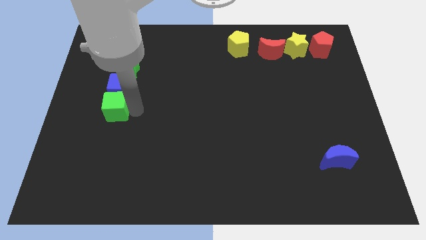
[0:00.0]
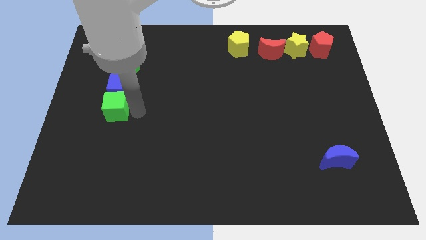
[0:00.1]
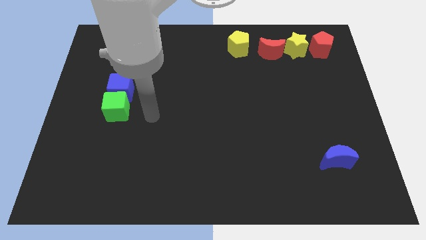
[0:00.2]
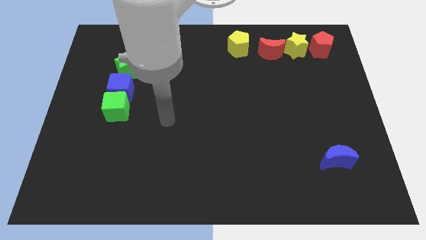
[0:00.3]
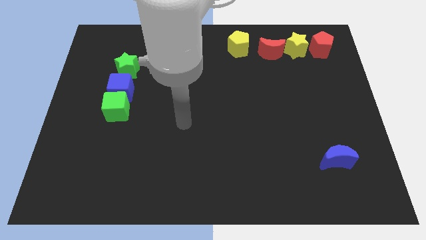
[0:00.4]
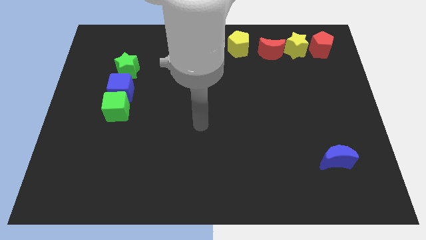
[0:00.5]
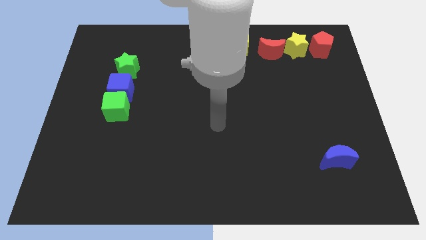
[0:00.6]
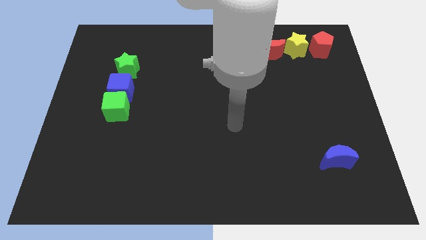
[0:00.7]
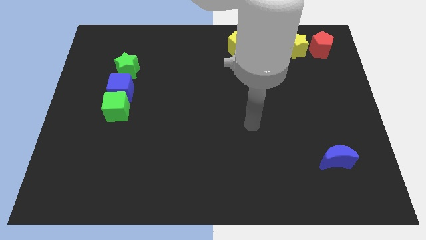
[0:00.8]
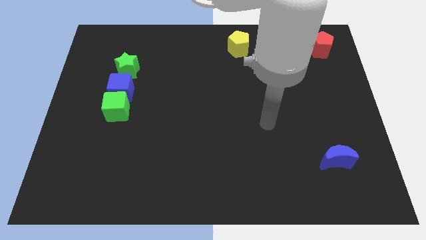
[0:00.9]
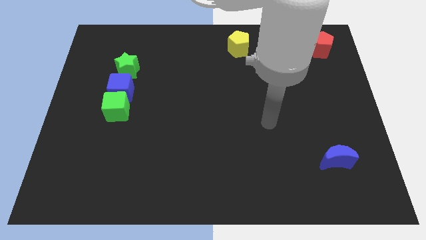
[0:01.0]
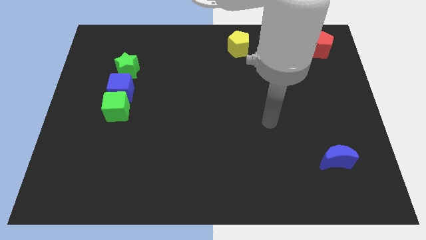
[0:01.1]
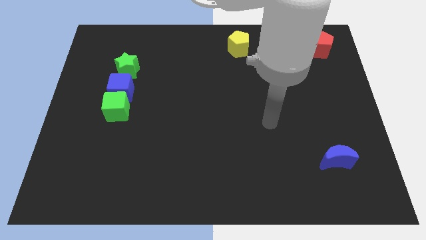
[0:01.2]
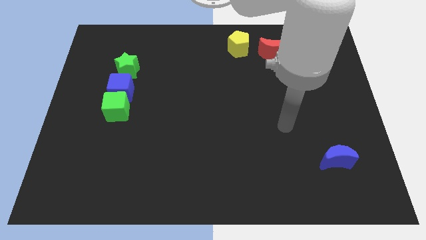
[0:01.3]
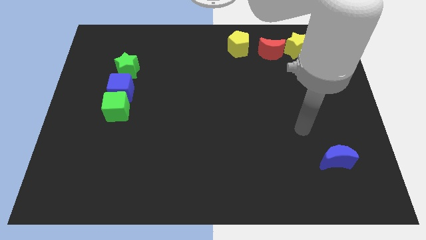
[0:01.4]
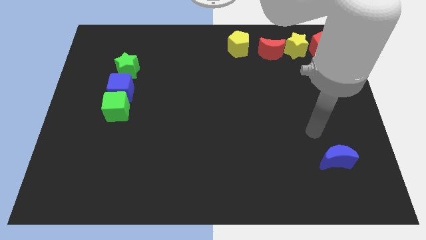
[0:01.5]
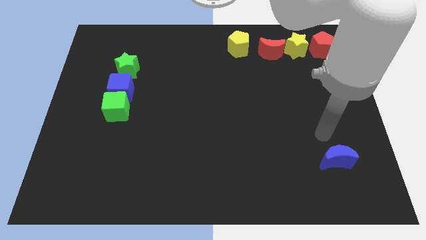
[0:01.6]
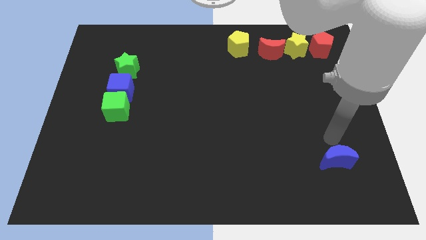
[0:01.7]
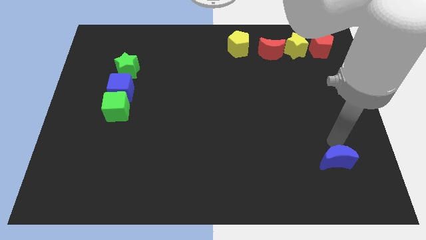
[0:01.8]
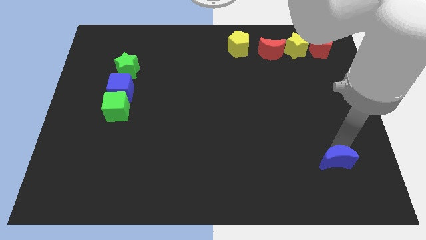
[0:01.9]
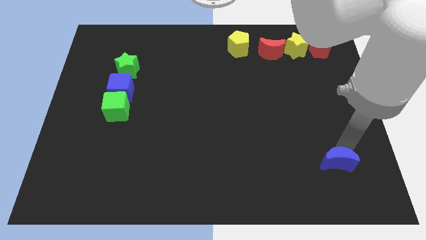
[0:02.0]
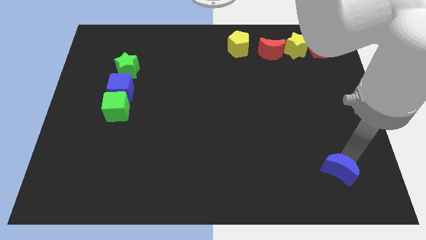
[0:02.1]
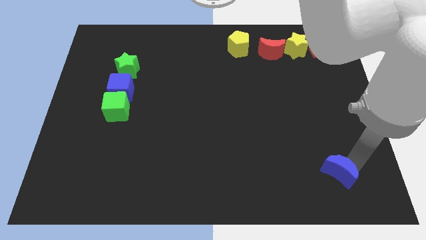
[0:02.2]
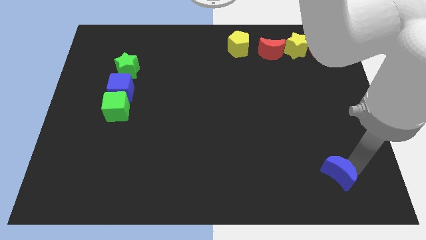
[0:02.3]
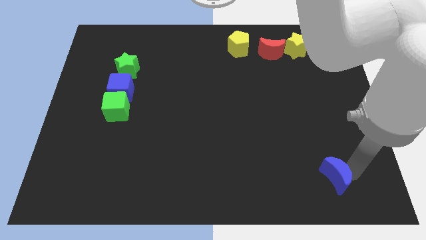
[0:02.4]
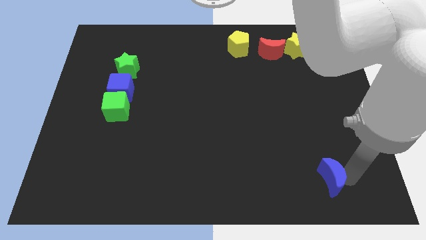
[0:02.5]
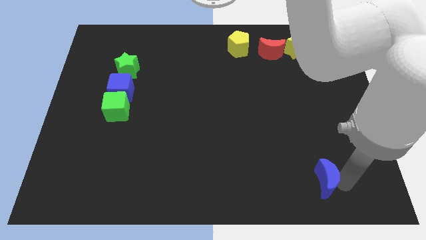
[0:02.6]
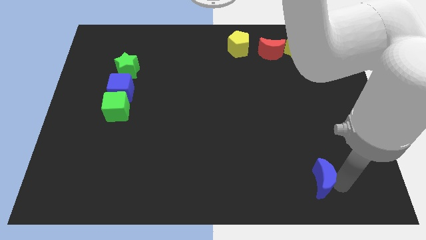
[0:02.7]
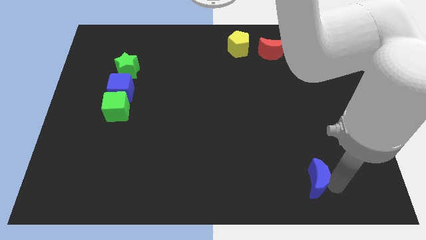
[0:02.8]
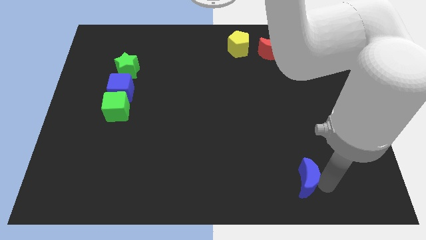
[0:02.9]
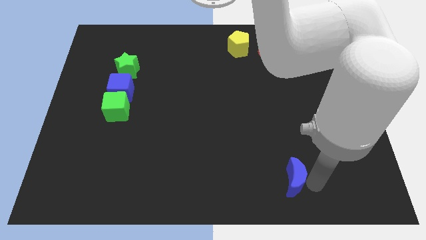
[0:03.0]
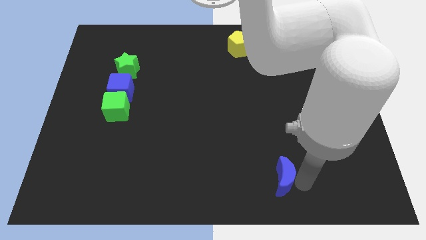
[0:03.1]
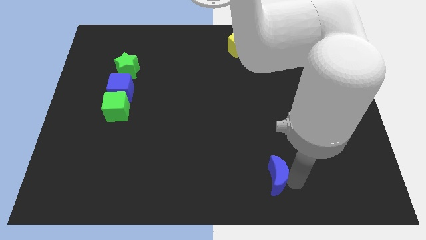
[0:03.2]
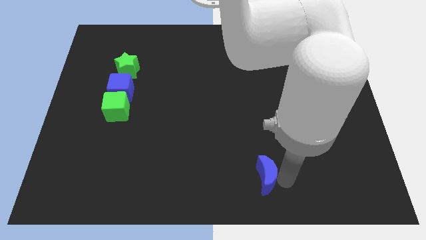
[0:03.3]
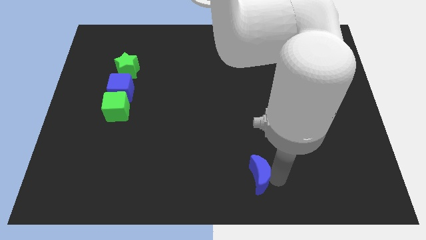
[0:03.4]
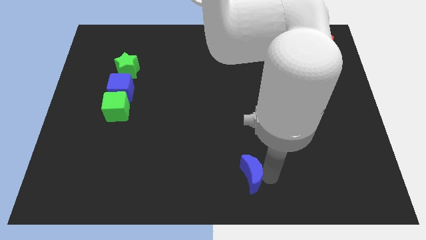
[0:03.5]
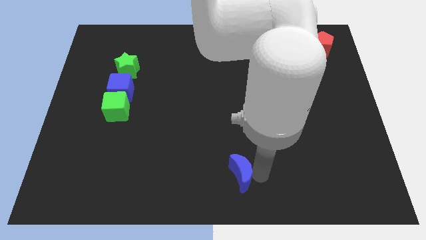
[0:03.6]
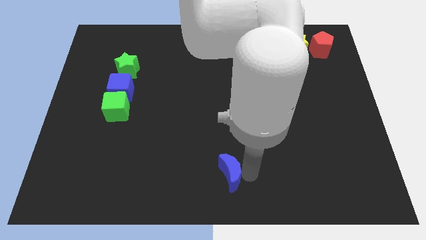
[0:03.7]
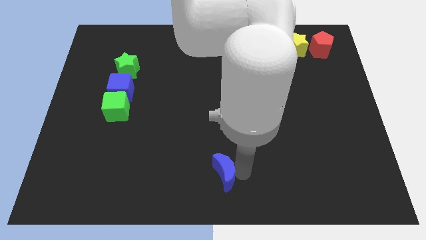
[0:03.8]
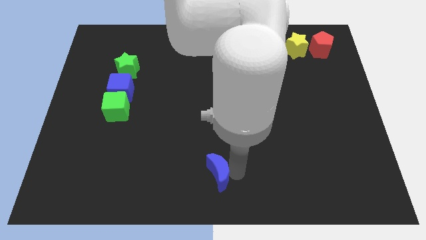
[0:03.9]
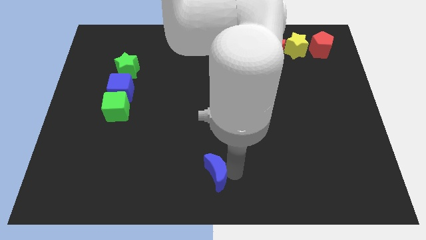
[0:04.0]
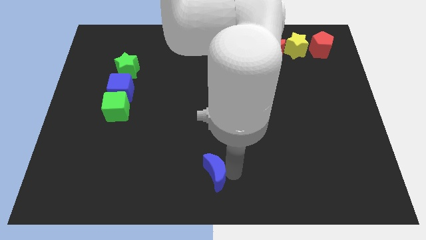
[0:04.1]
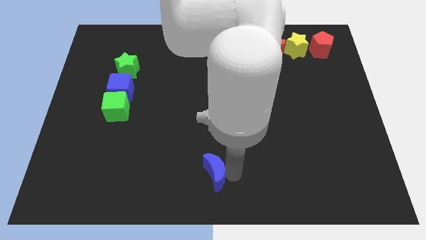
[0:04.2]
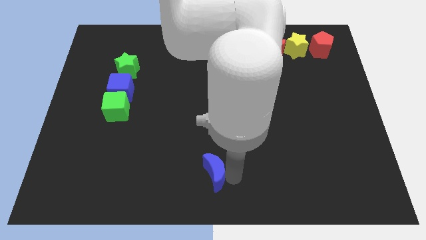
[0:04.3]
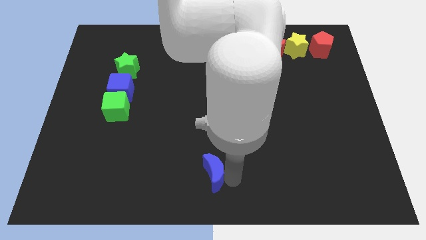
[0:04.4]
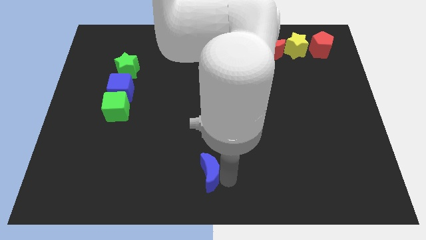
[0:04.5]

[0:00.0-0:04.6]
move the blue crescent towards the bottom center of the board

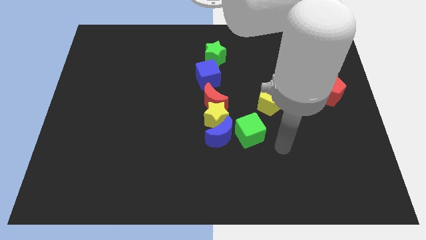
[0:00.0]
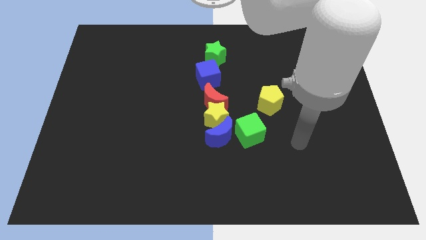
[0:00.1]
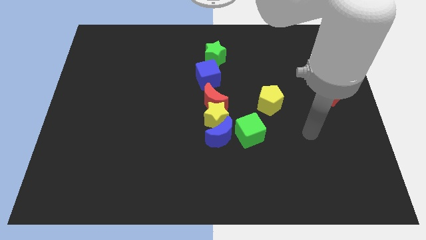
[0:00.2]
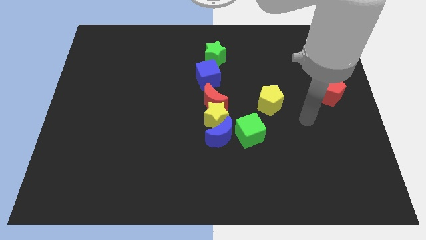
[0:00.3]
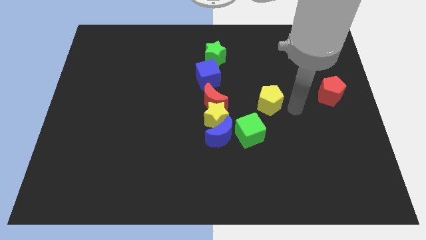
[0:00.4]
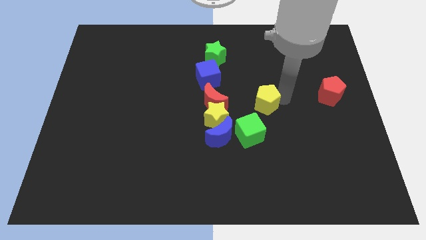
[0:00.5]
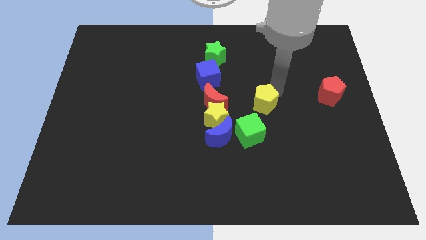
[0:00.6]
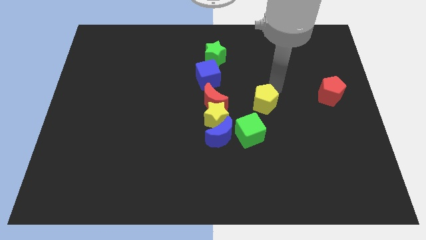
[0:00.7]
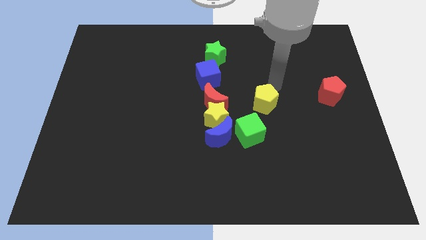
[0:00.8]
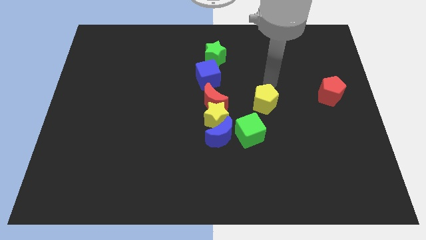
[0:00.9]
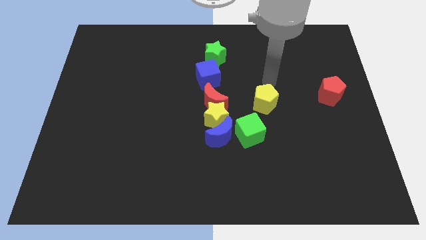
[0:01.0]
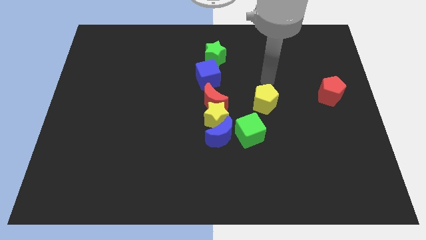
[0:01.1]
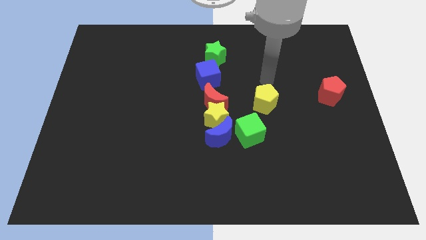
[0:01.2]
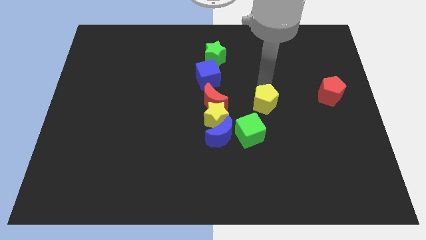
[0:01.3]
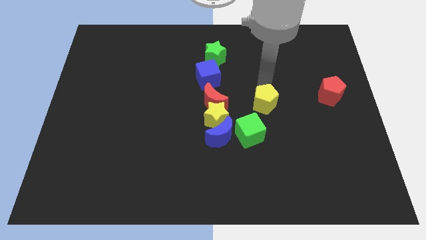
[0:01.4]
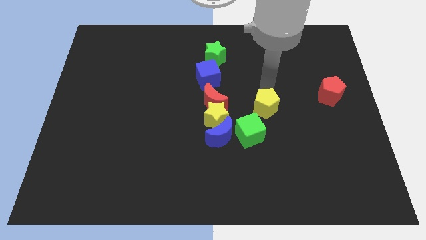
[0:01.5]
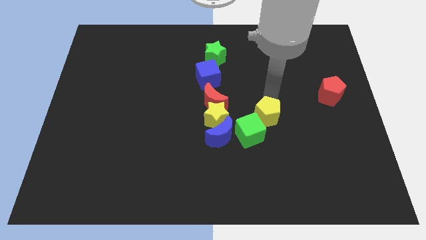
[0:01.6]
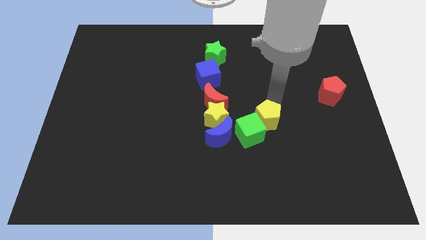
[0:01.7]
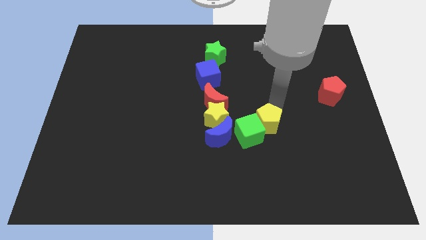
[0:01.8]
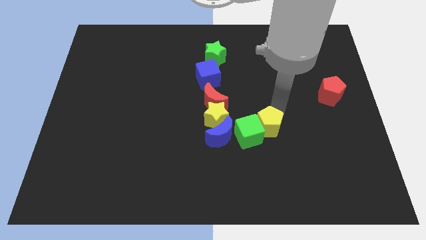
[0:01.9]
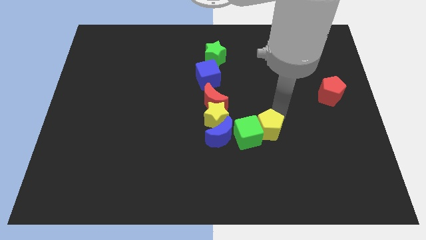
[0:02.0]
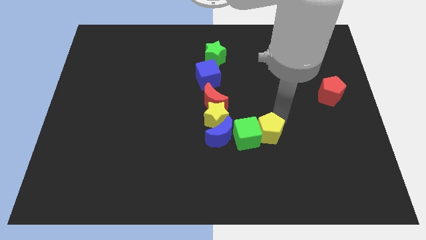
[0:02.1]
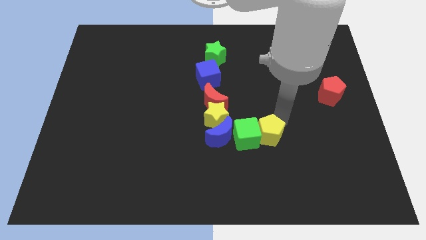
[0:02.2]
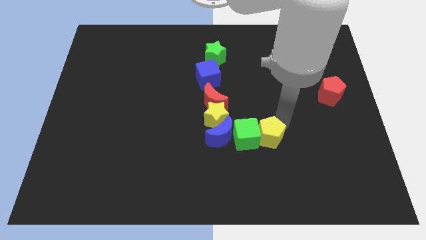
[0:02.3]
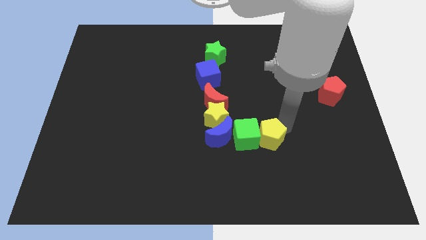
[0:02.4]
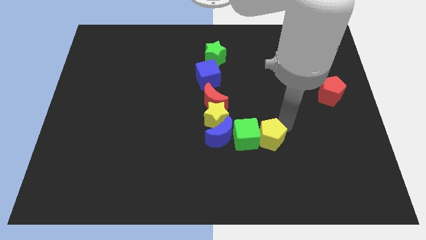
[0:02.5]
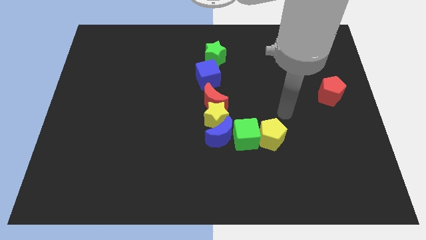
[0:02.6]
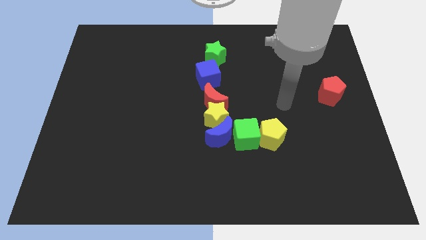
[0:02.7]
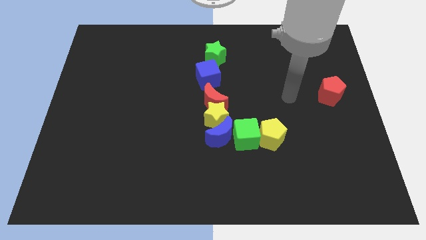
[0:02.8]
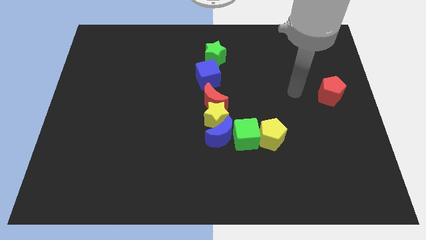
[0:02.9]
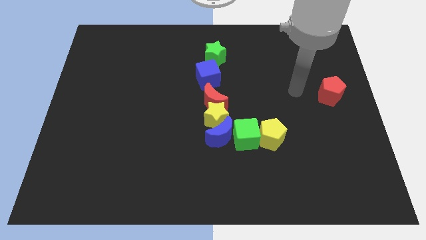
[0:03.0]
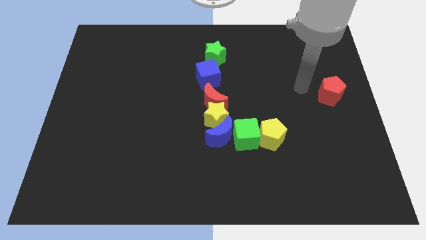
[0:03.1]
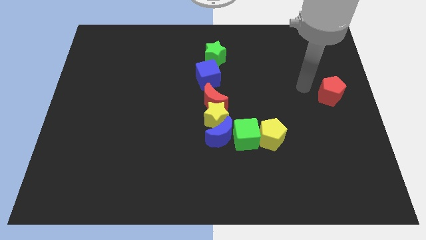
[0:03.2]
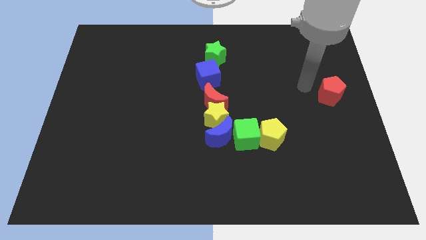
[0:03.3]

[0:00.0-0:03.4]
place yellow pentagon at the right side of the green cube

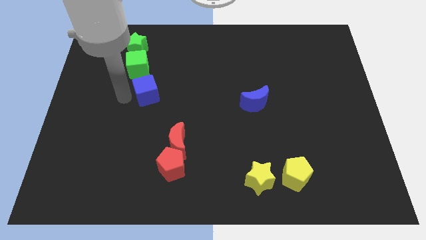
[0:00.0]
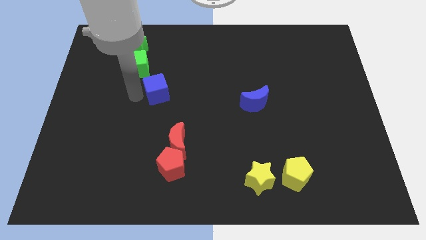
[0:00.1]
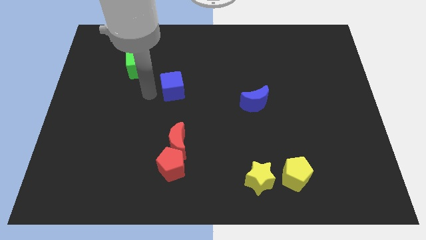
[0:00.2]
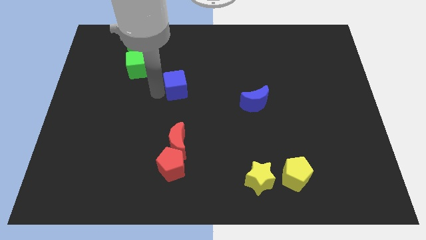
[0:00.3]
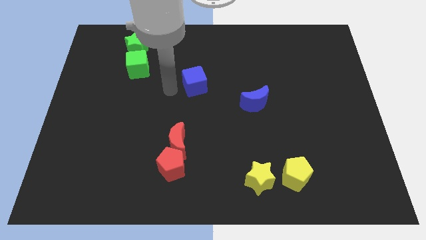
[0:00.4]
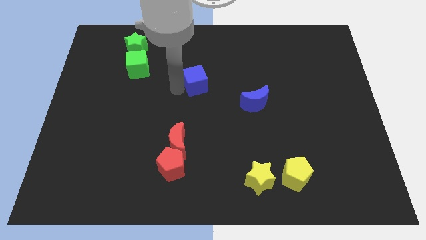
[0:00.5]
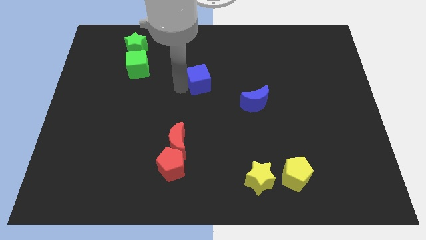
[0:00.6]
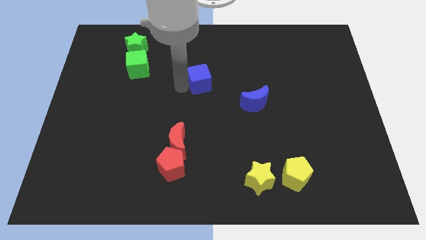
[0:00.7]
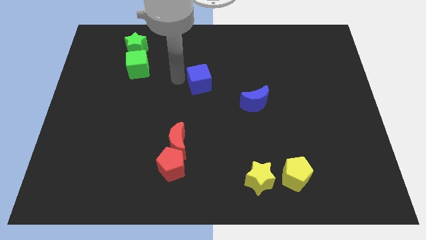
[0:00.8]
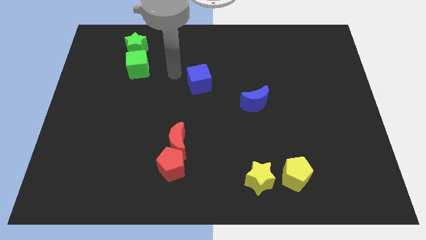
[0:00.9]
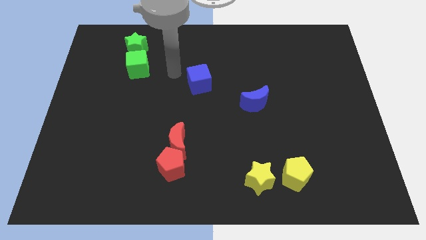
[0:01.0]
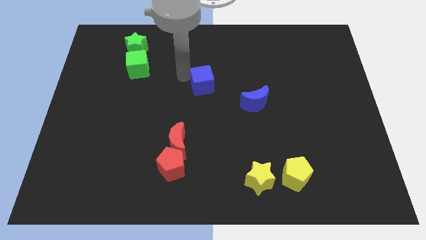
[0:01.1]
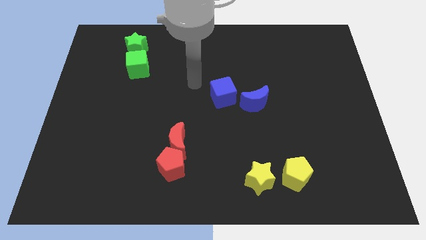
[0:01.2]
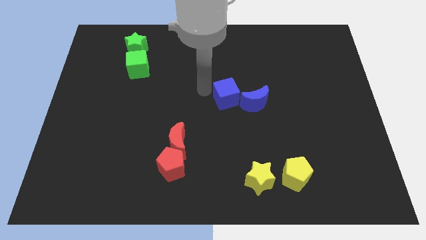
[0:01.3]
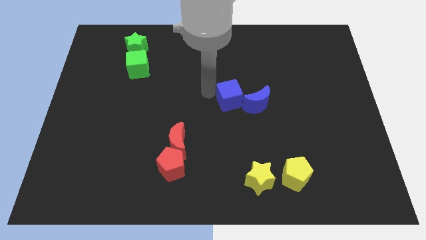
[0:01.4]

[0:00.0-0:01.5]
push the blue cube on the left side of the blue crescent
